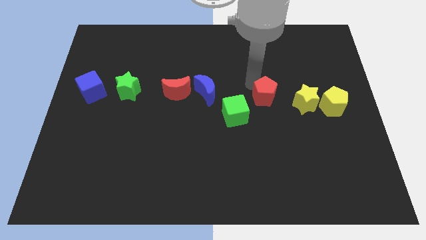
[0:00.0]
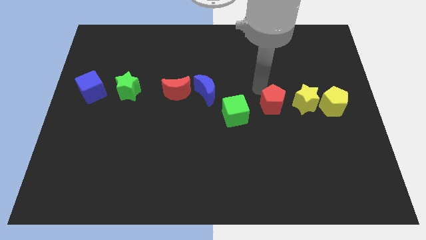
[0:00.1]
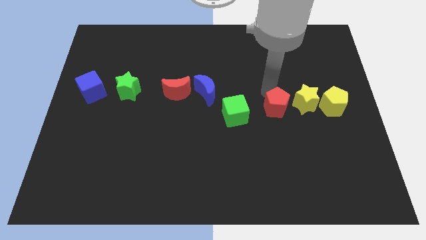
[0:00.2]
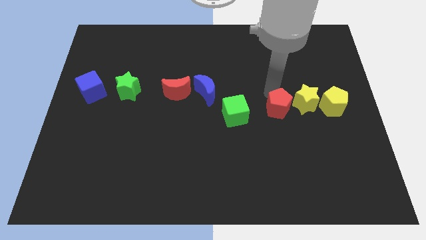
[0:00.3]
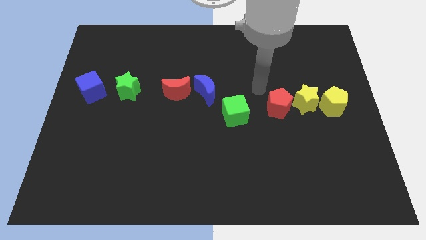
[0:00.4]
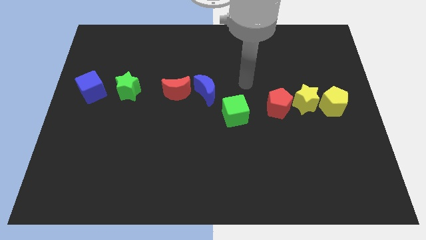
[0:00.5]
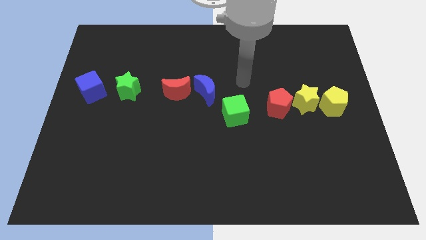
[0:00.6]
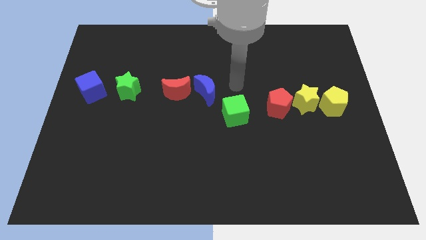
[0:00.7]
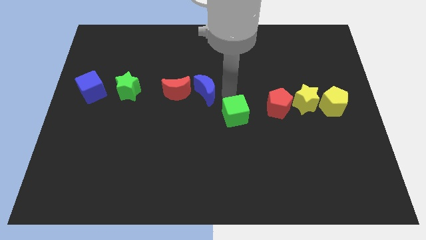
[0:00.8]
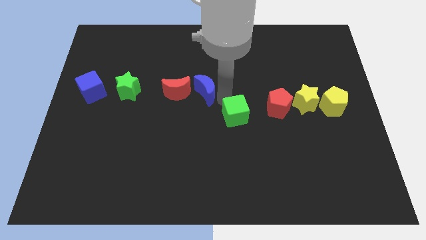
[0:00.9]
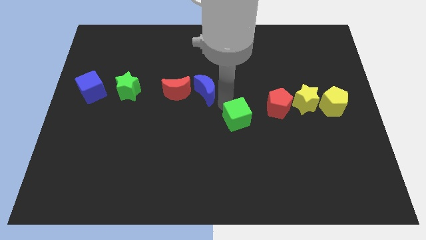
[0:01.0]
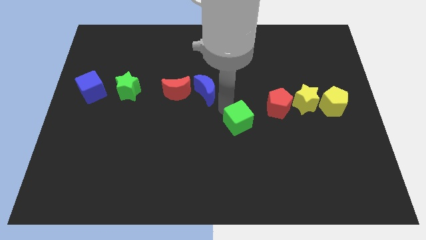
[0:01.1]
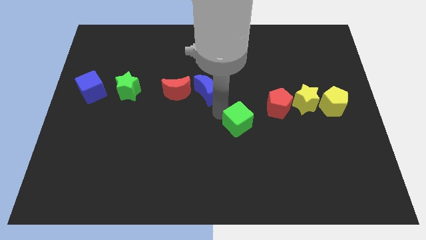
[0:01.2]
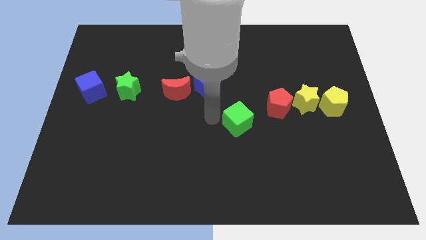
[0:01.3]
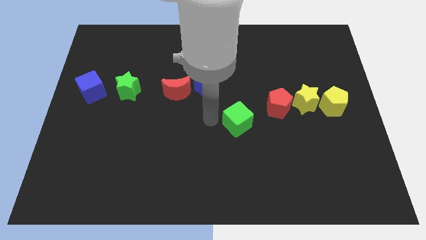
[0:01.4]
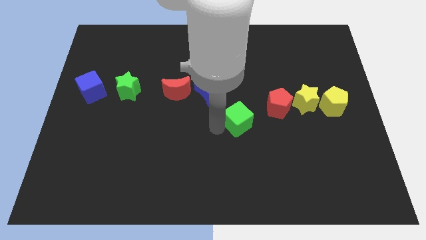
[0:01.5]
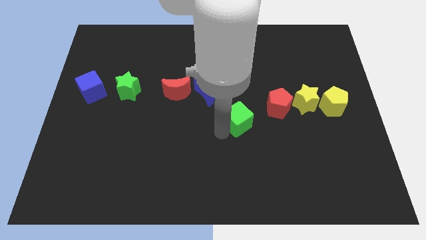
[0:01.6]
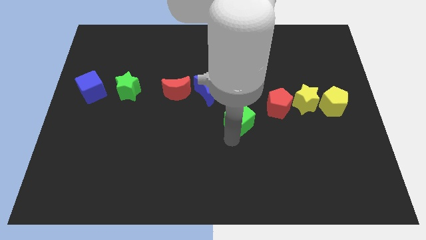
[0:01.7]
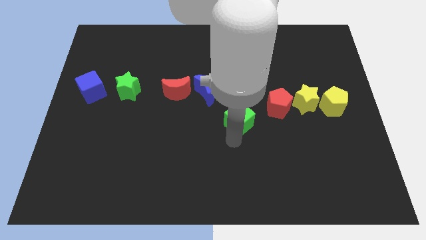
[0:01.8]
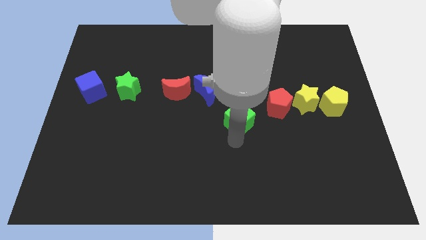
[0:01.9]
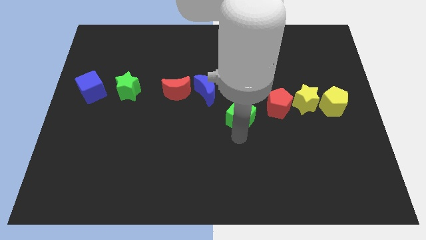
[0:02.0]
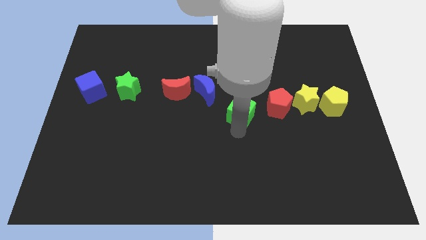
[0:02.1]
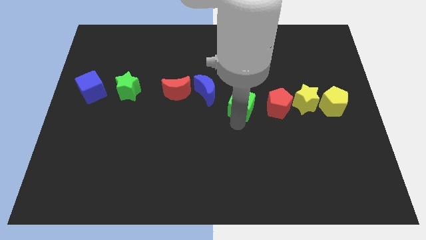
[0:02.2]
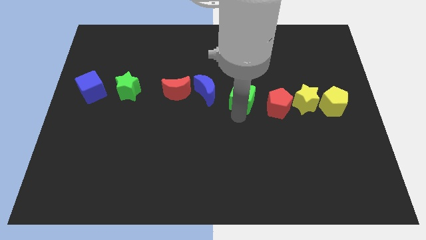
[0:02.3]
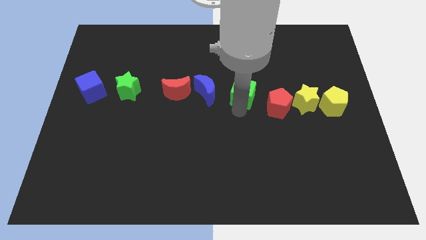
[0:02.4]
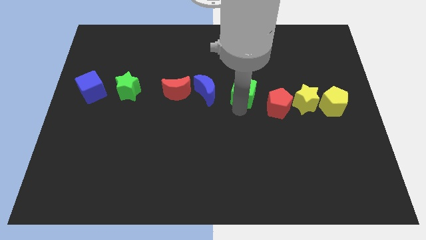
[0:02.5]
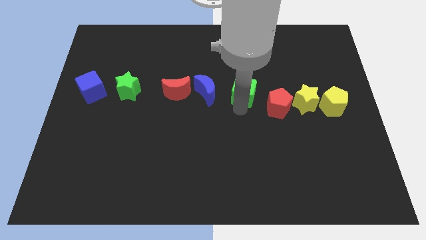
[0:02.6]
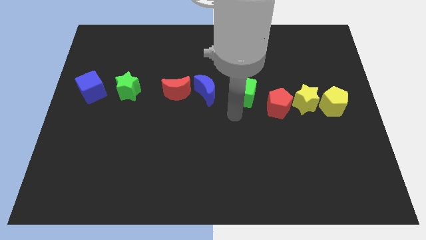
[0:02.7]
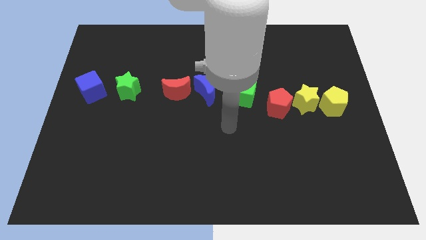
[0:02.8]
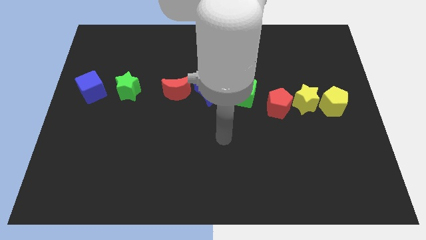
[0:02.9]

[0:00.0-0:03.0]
place the green cube beside the blue moon to form a line

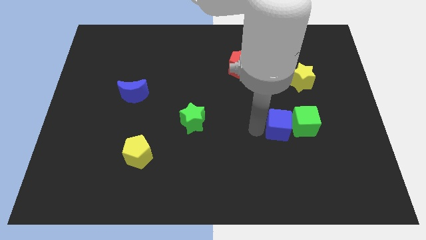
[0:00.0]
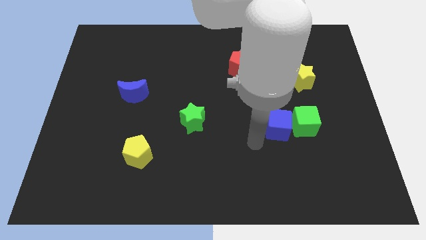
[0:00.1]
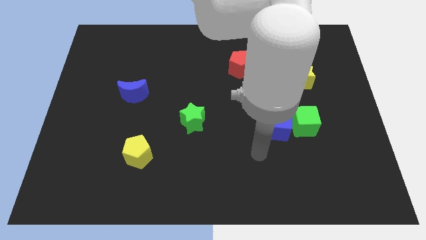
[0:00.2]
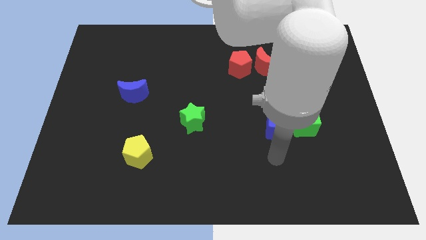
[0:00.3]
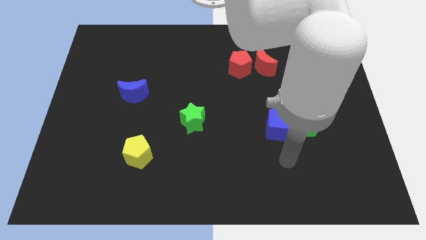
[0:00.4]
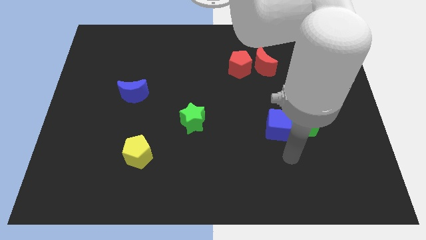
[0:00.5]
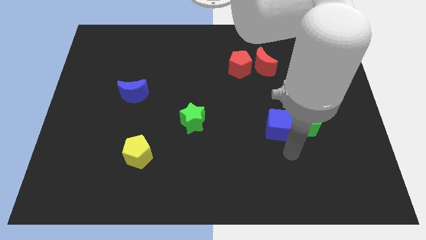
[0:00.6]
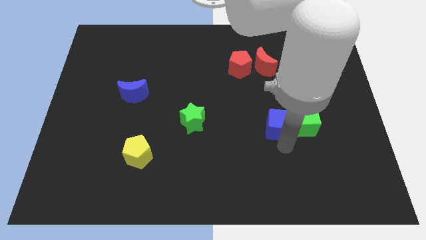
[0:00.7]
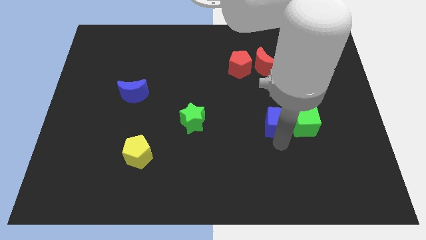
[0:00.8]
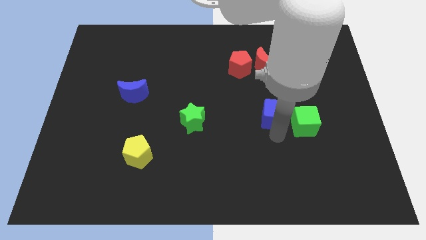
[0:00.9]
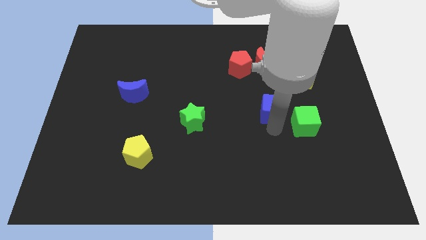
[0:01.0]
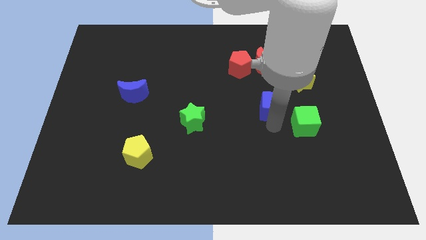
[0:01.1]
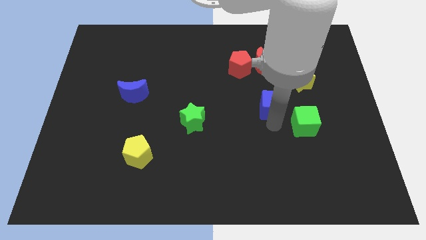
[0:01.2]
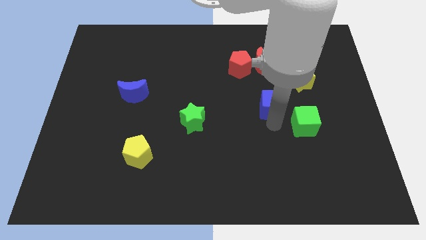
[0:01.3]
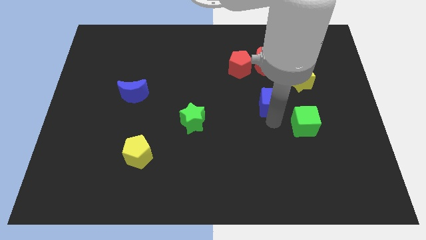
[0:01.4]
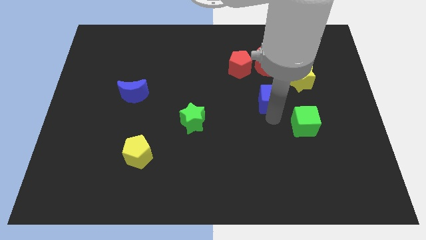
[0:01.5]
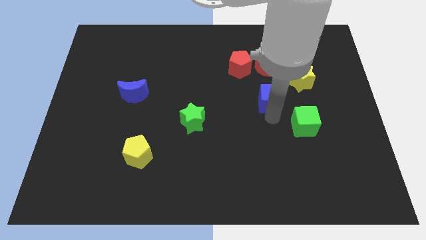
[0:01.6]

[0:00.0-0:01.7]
move blue cube slightly up

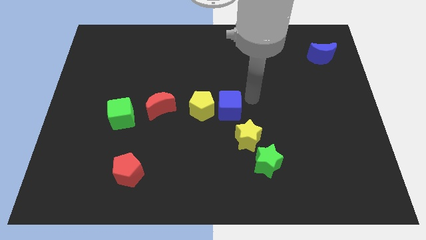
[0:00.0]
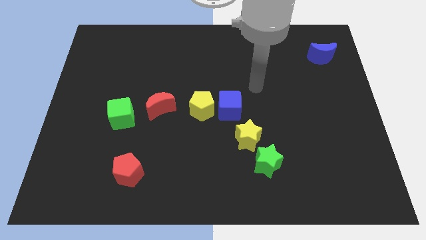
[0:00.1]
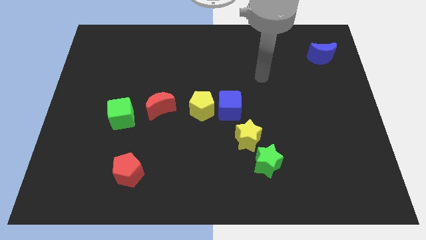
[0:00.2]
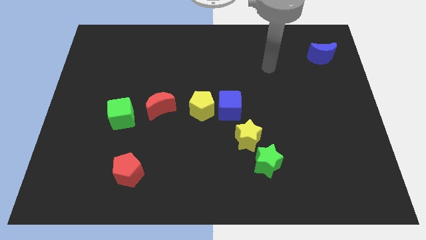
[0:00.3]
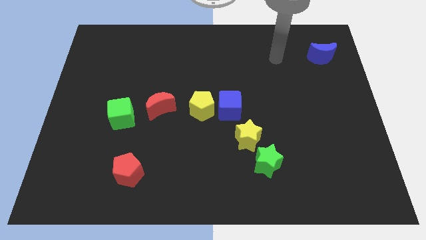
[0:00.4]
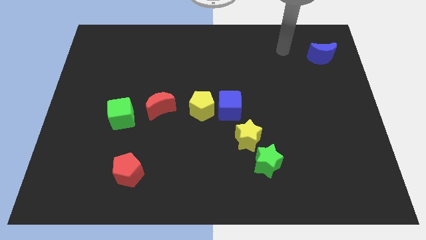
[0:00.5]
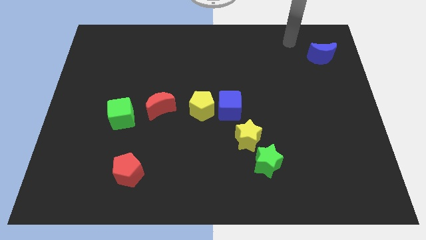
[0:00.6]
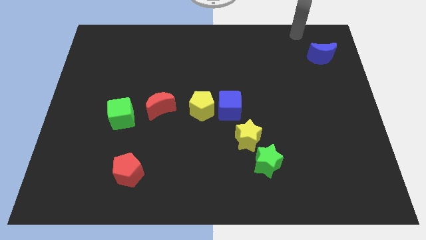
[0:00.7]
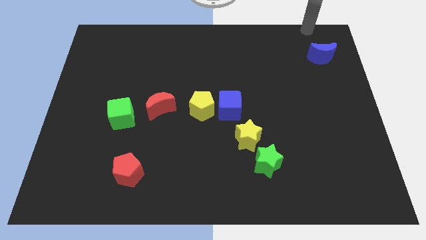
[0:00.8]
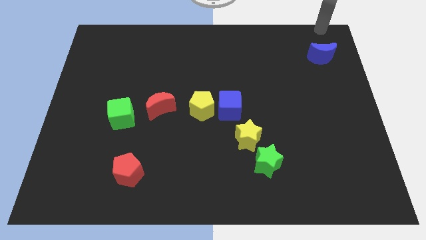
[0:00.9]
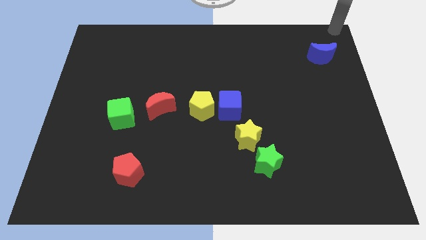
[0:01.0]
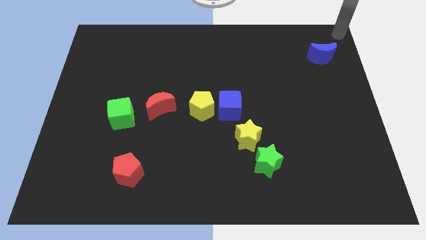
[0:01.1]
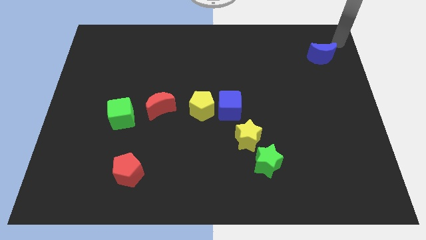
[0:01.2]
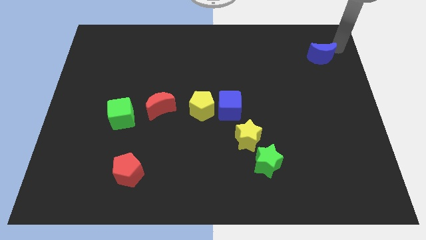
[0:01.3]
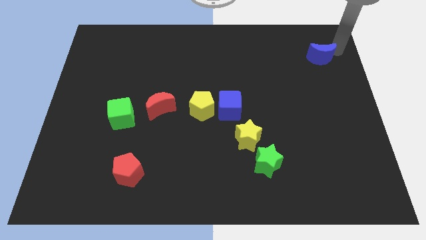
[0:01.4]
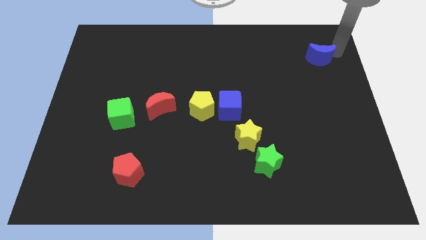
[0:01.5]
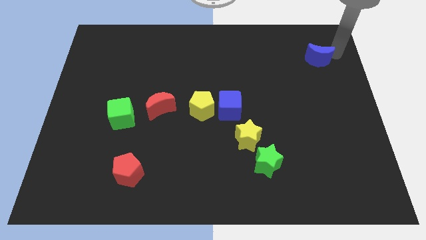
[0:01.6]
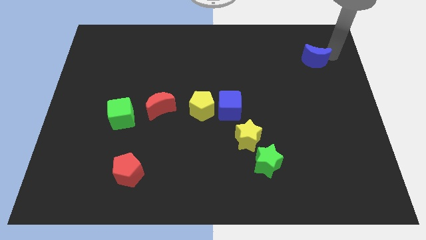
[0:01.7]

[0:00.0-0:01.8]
move your arm away from the blue cube

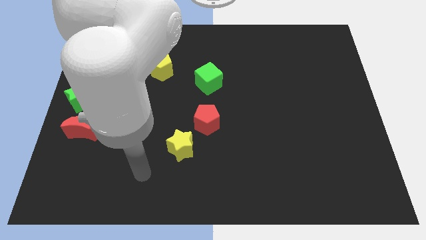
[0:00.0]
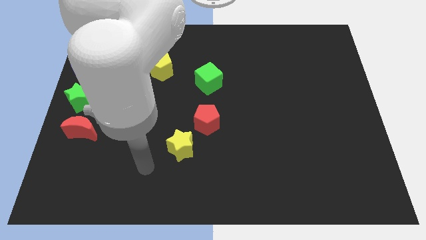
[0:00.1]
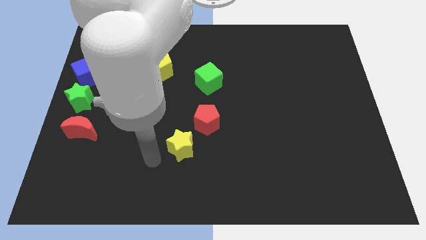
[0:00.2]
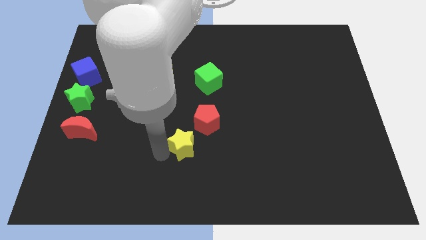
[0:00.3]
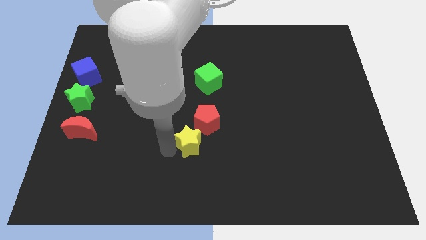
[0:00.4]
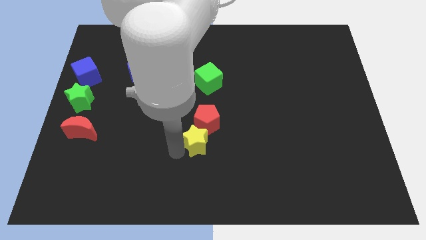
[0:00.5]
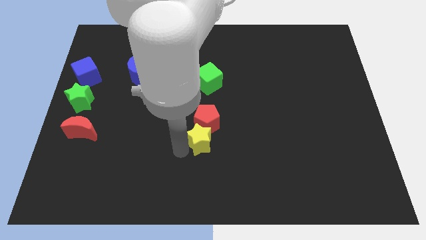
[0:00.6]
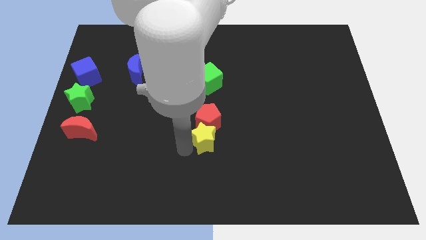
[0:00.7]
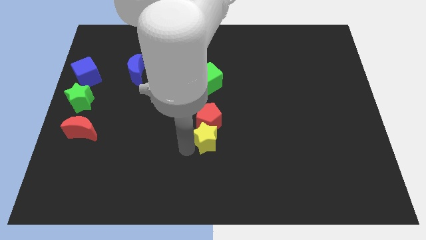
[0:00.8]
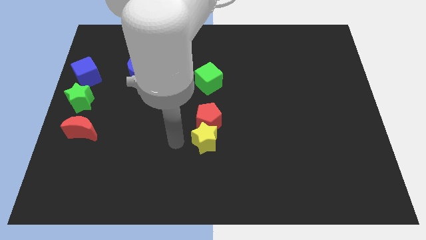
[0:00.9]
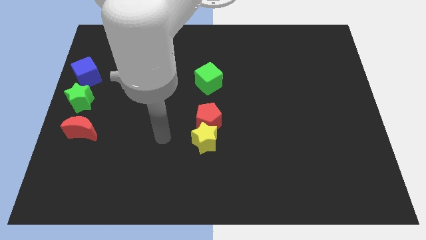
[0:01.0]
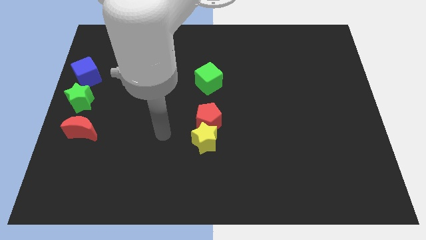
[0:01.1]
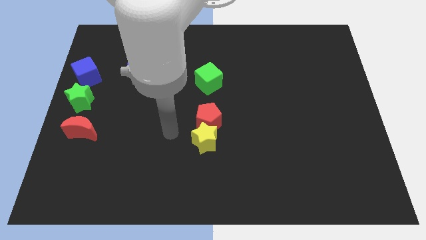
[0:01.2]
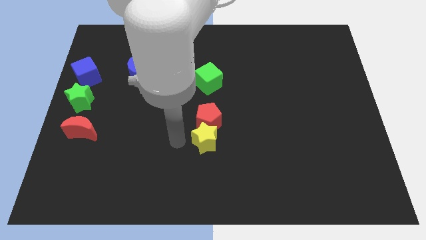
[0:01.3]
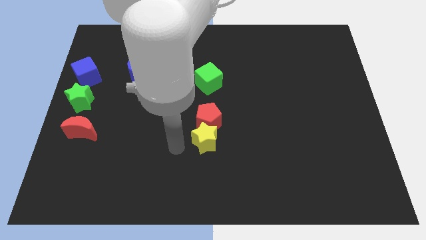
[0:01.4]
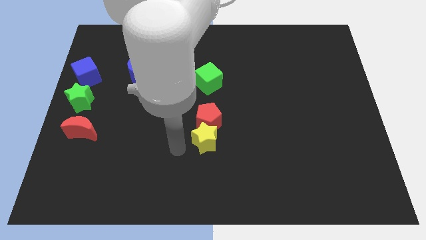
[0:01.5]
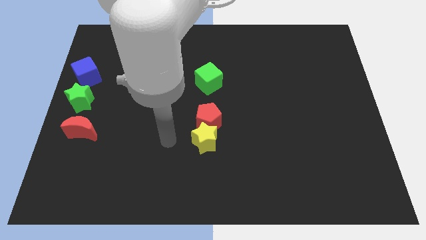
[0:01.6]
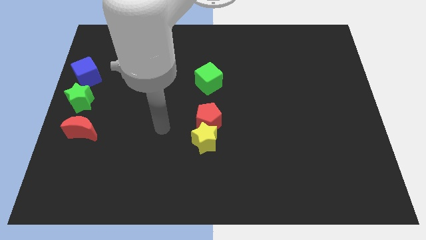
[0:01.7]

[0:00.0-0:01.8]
place the yellow star into the red pentagon

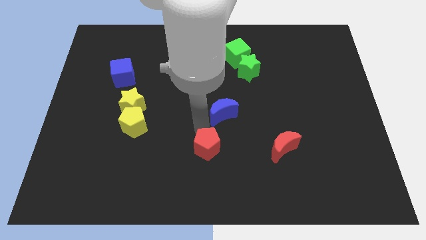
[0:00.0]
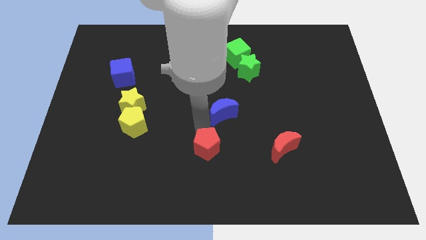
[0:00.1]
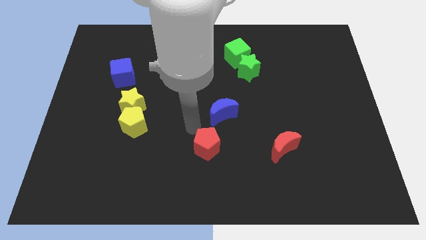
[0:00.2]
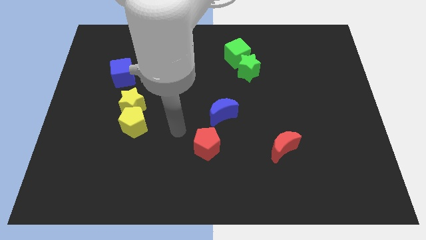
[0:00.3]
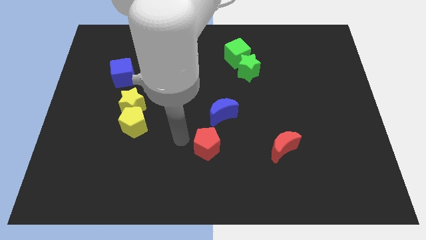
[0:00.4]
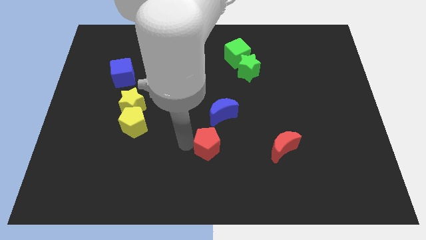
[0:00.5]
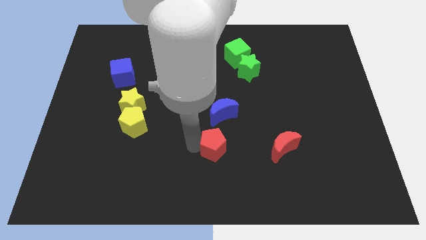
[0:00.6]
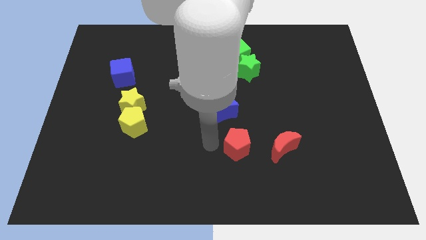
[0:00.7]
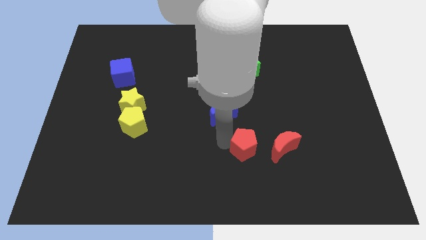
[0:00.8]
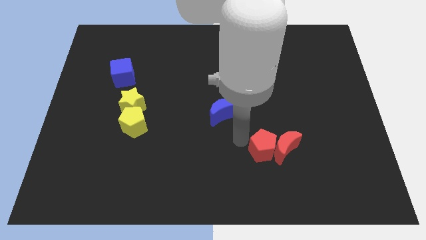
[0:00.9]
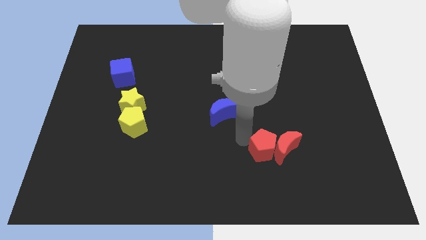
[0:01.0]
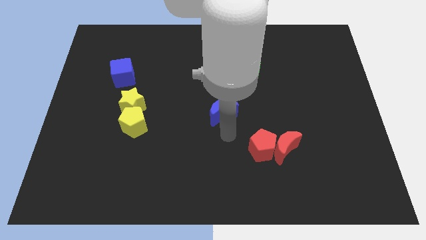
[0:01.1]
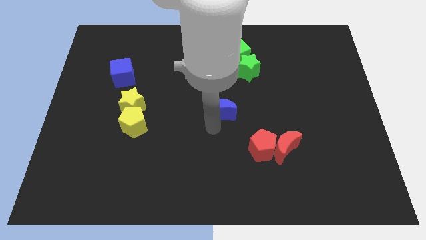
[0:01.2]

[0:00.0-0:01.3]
push the red pentagon into the red crescent
